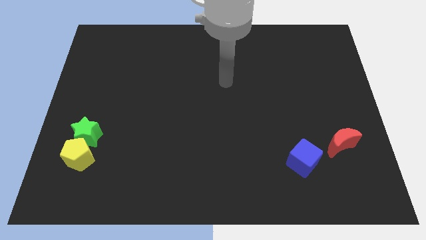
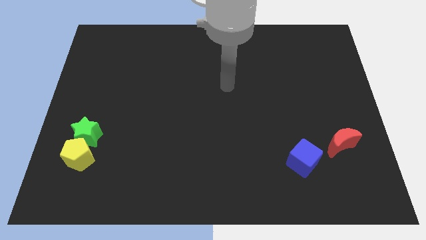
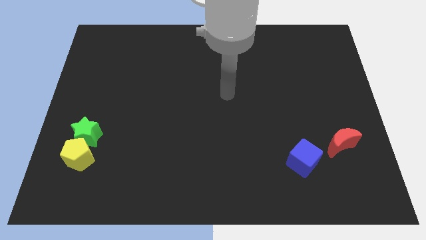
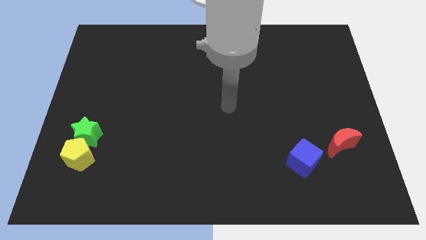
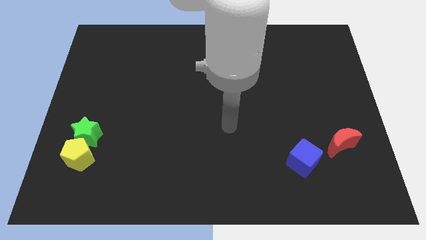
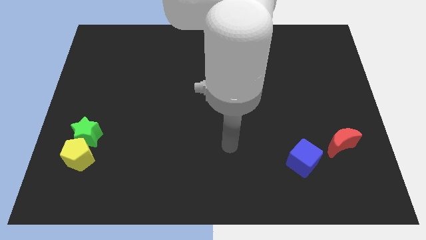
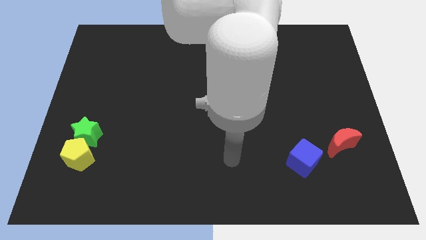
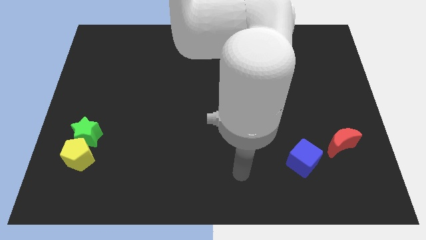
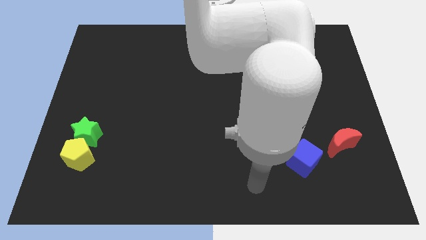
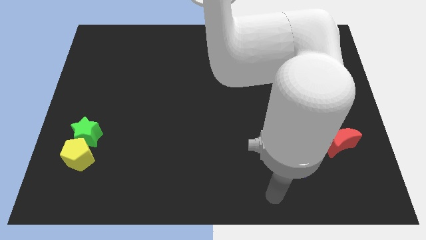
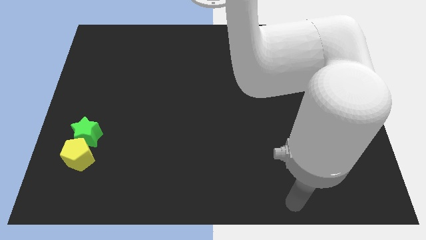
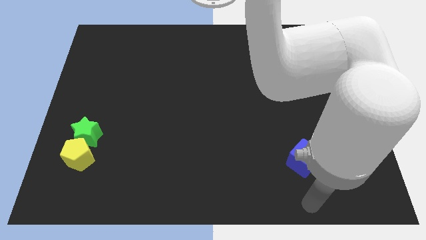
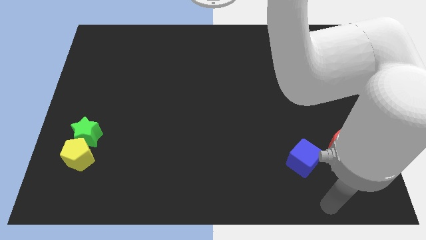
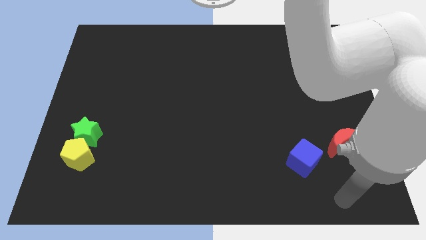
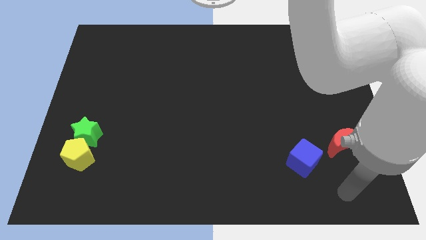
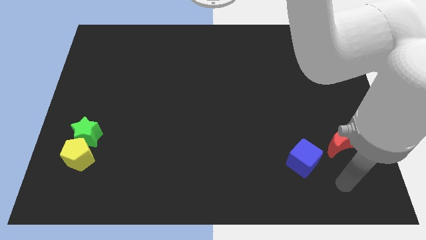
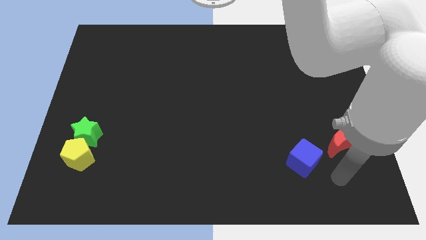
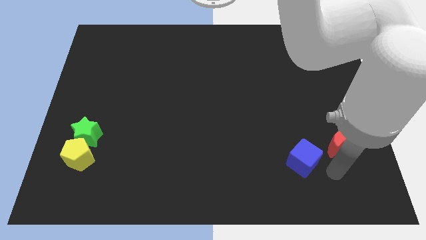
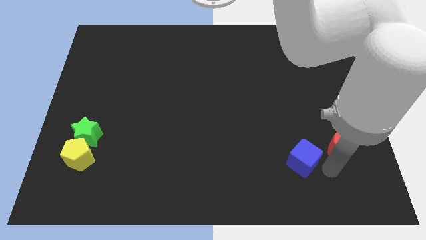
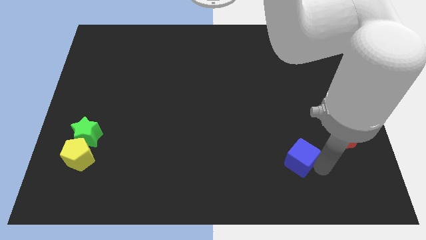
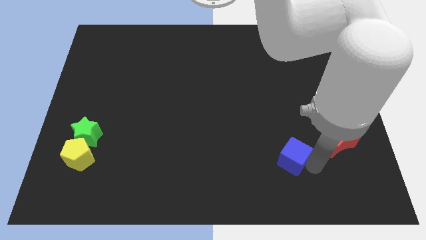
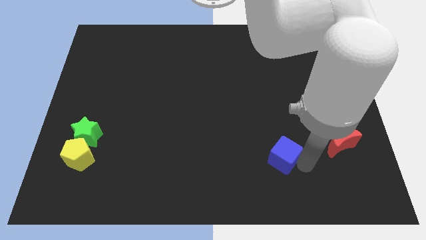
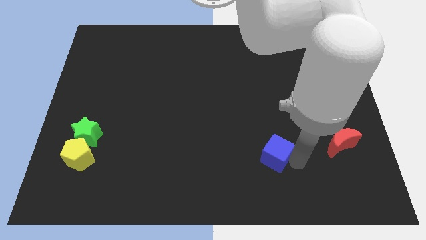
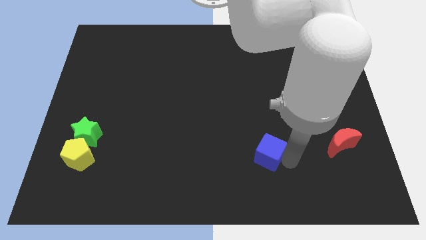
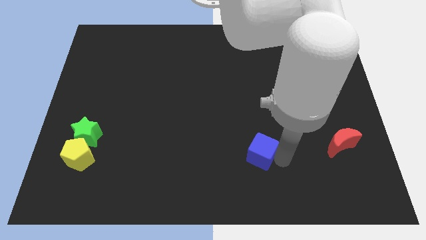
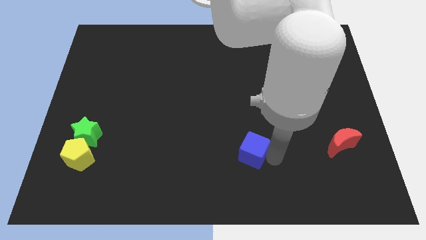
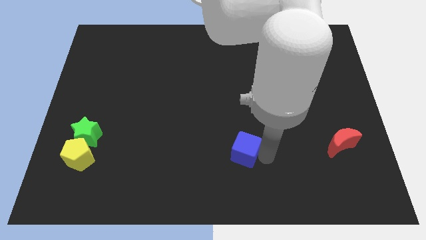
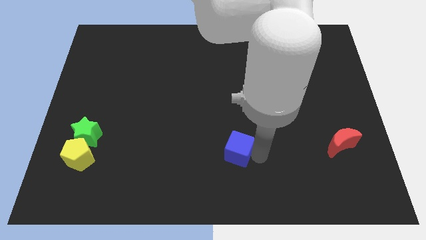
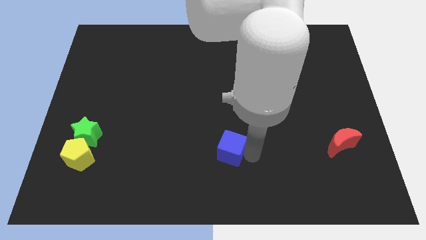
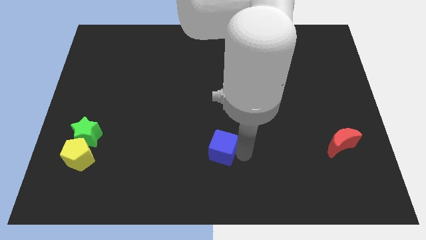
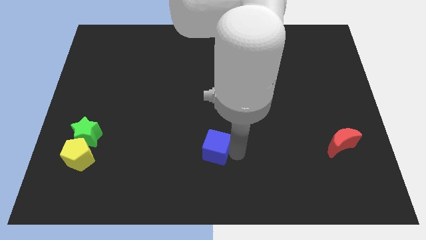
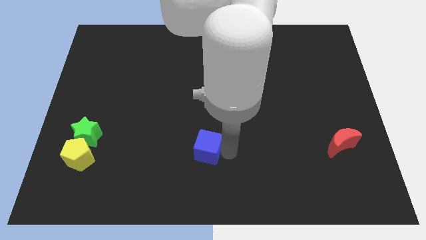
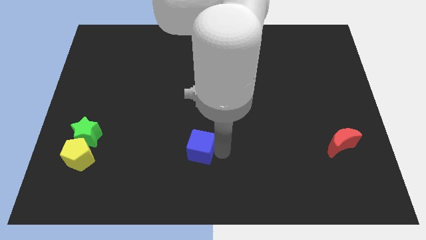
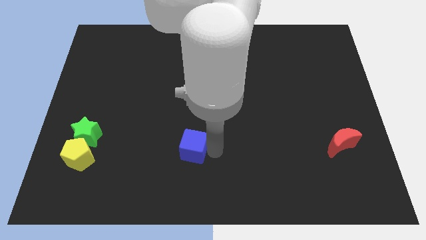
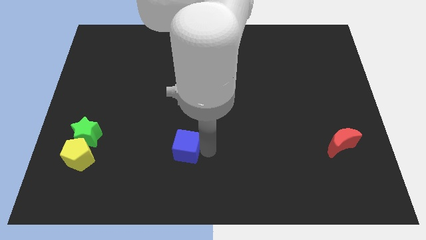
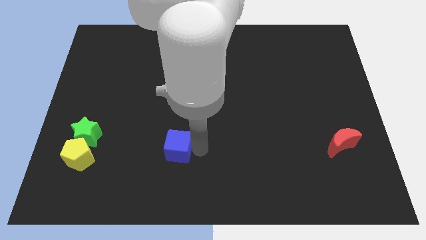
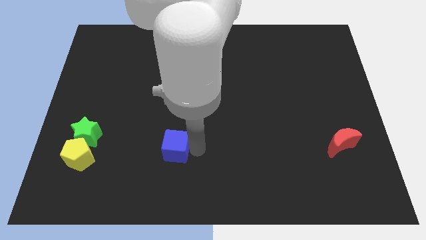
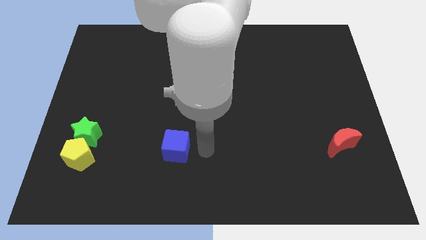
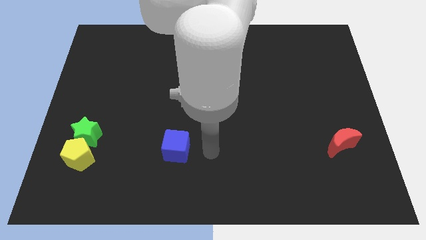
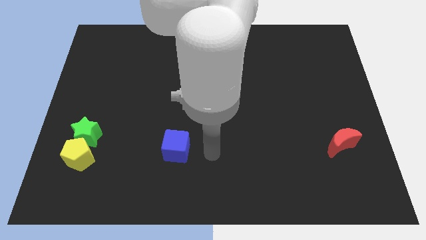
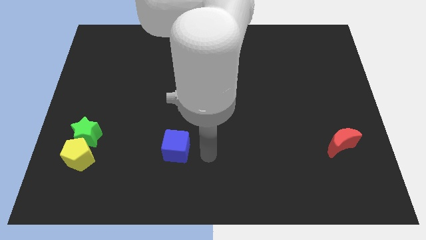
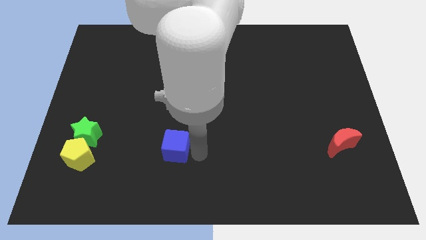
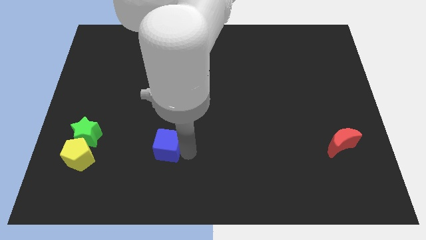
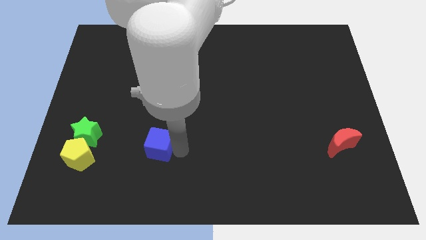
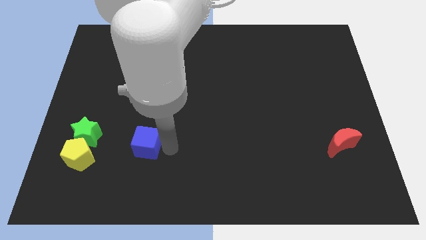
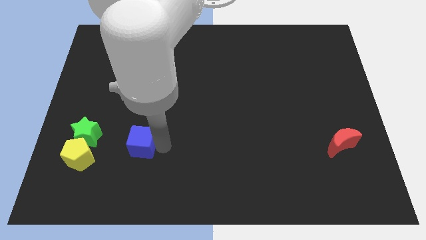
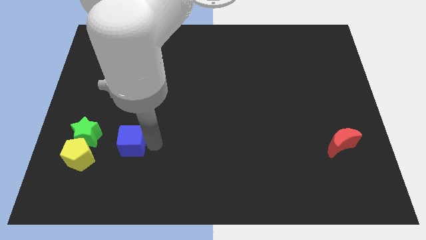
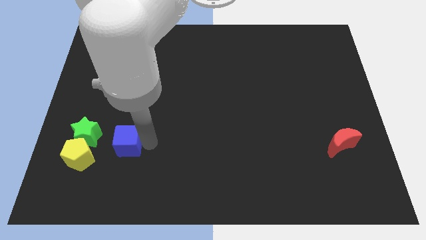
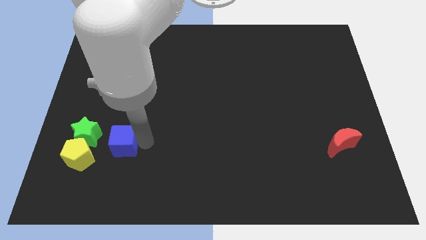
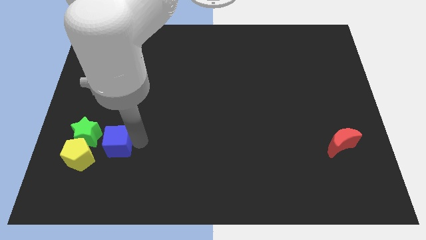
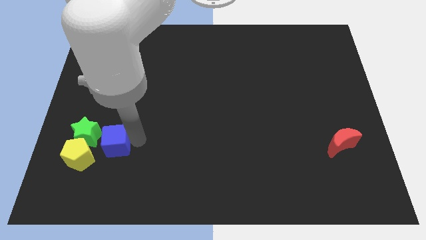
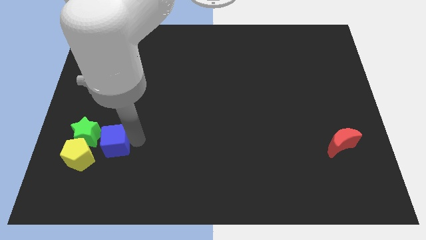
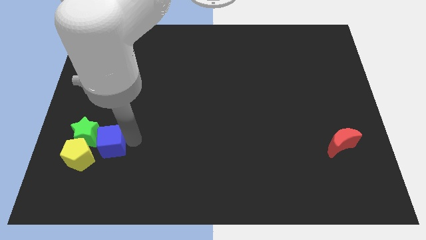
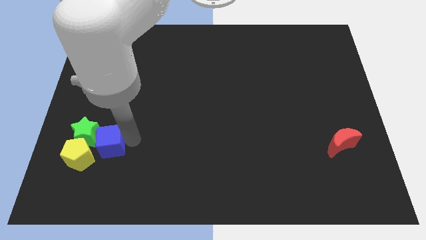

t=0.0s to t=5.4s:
move the blue block towards the green star

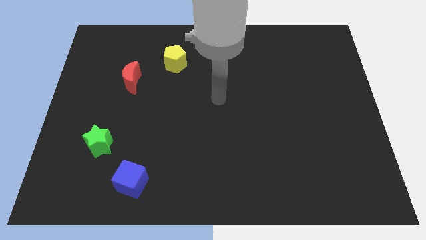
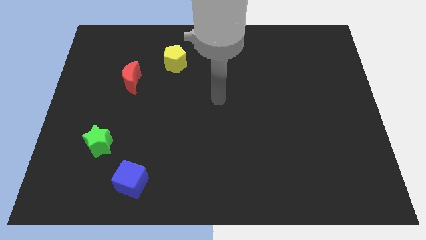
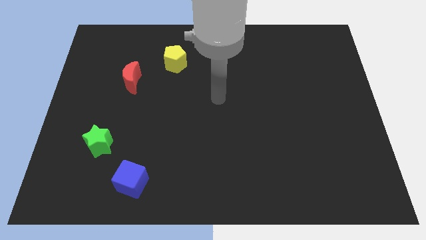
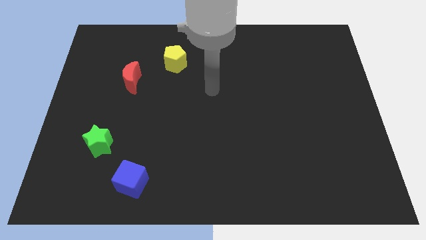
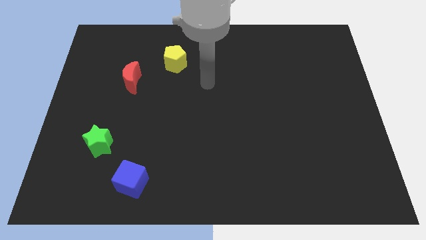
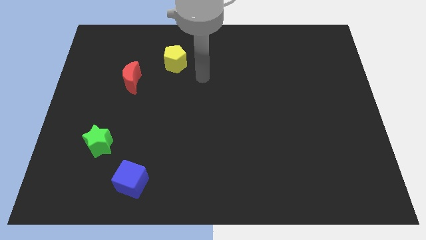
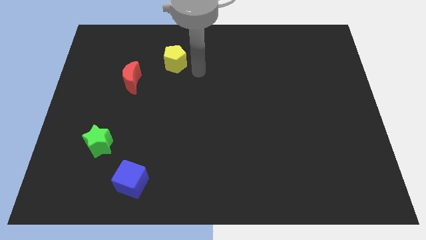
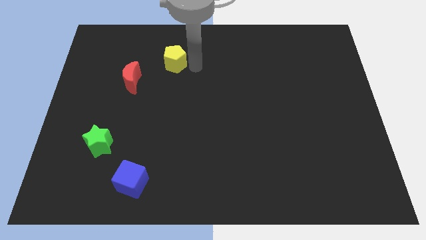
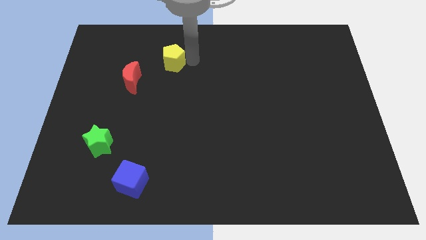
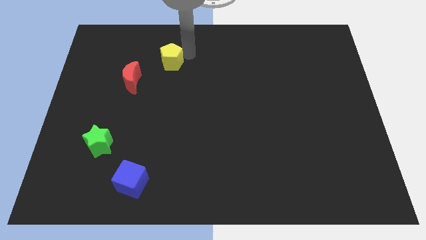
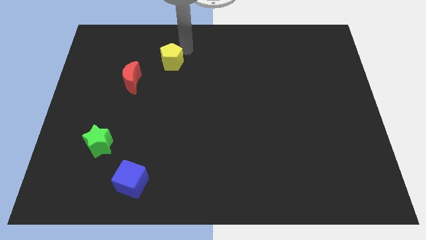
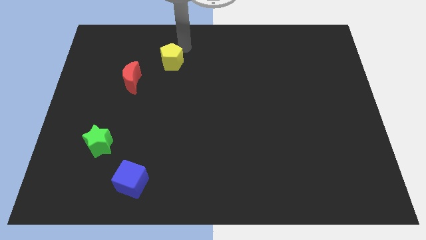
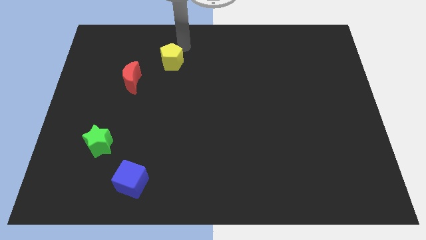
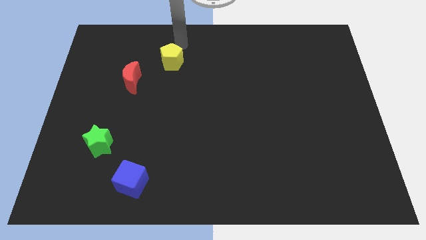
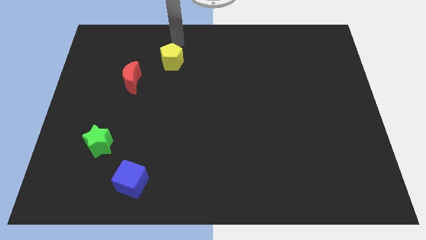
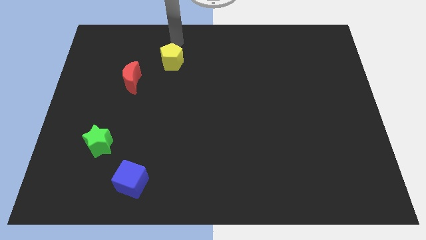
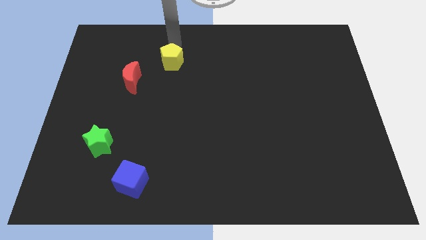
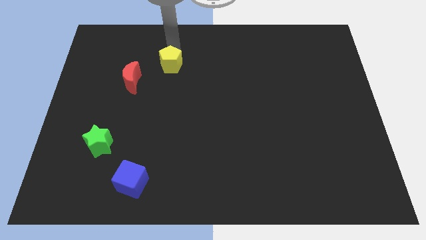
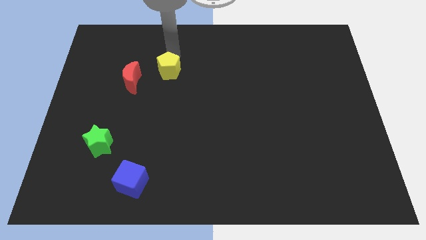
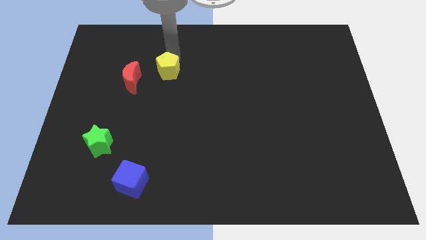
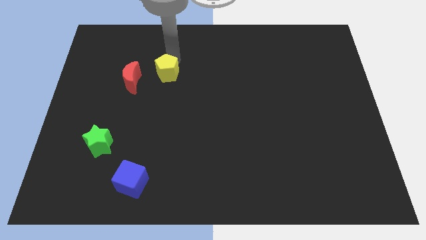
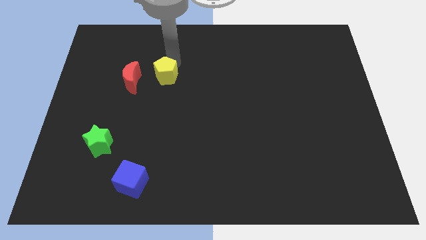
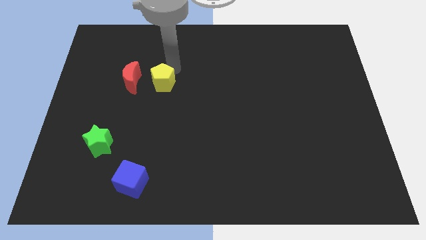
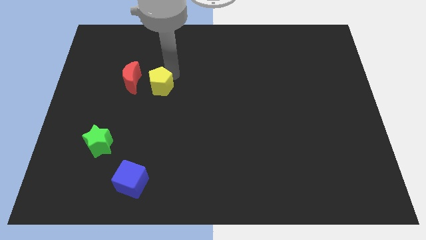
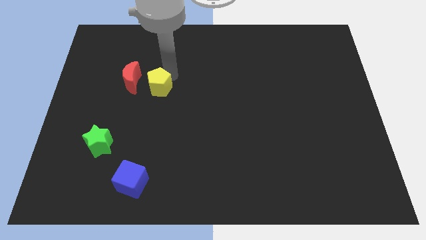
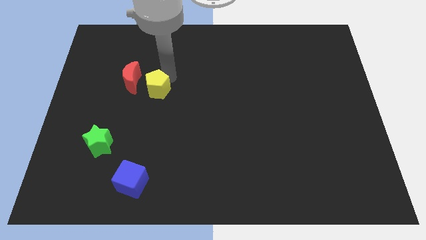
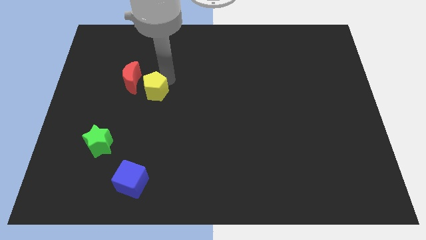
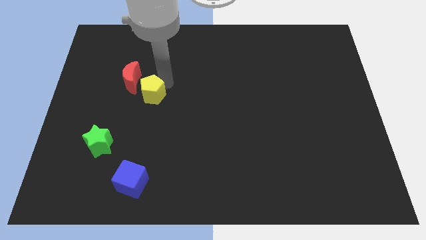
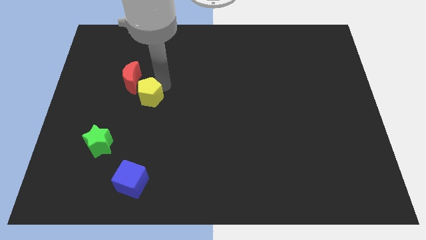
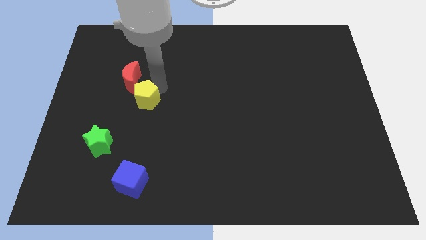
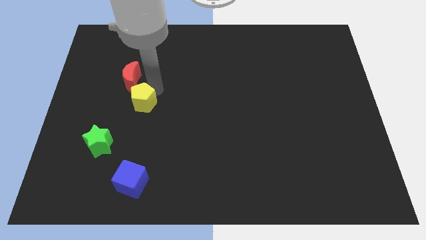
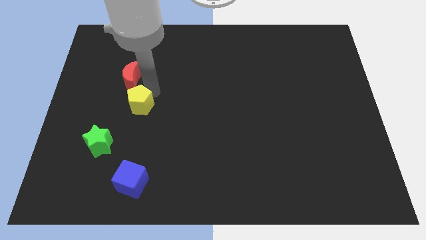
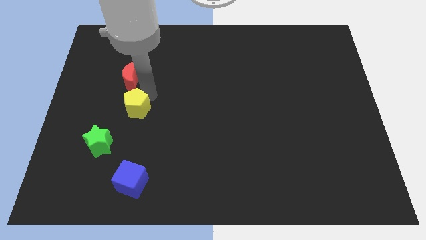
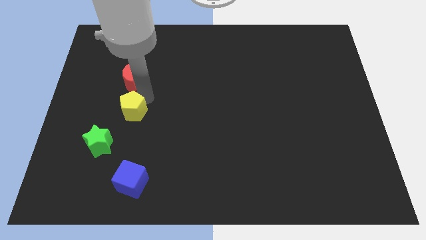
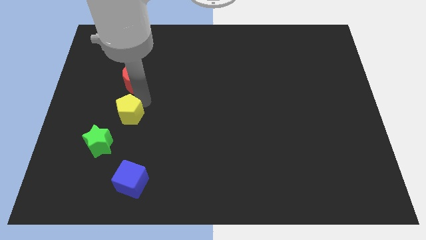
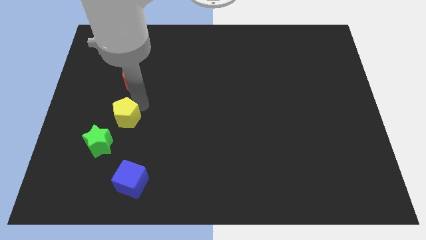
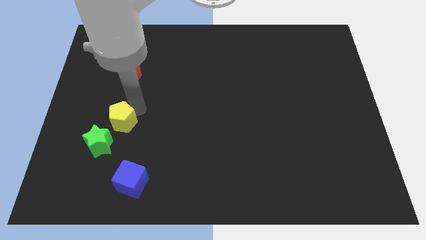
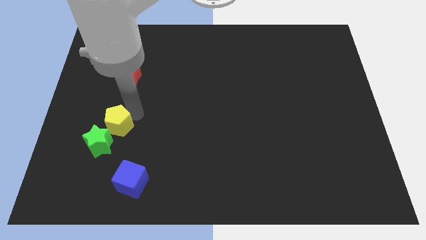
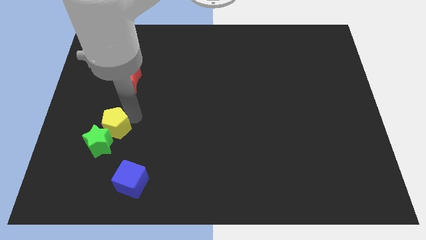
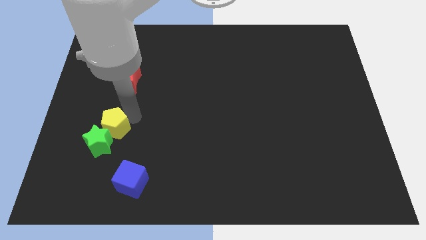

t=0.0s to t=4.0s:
slide the yellow pentagon next to the green block
